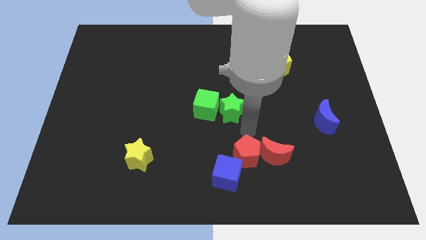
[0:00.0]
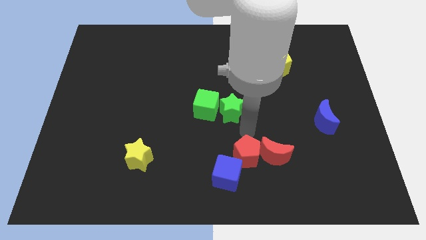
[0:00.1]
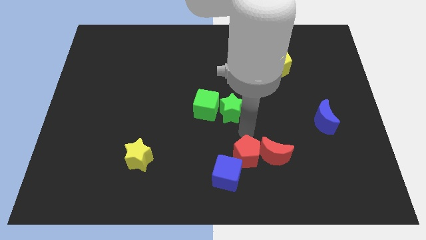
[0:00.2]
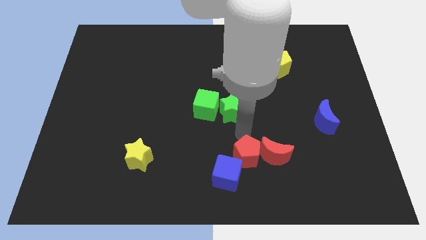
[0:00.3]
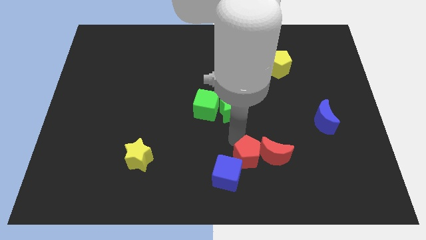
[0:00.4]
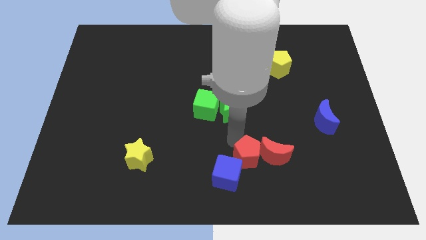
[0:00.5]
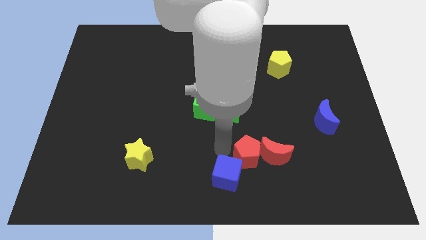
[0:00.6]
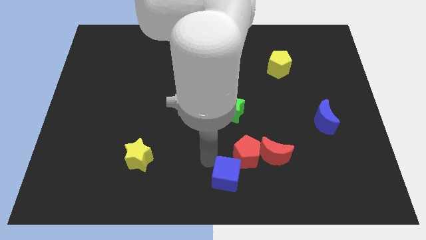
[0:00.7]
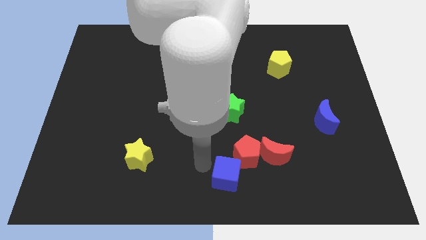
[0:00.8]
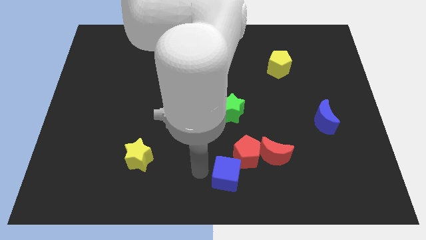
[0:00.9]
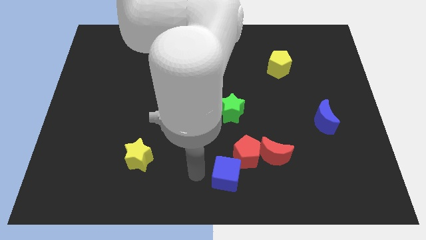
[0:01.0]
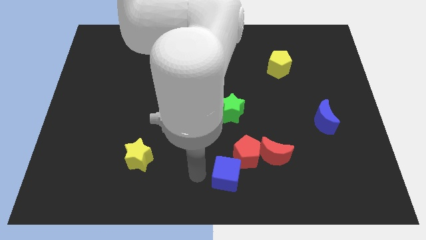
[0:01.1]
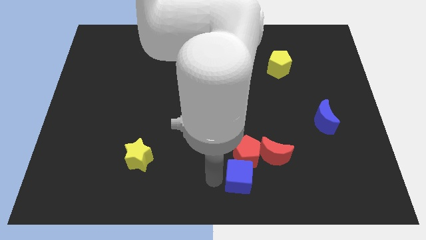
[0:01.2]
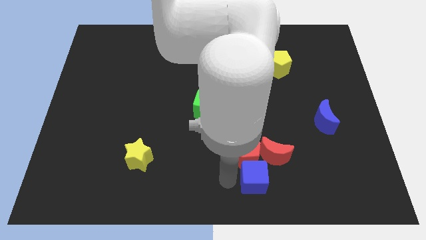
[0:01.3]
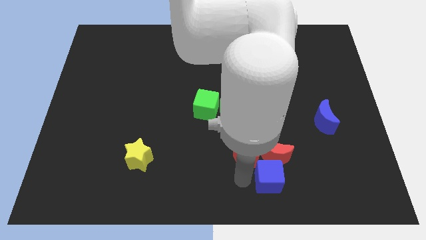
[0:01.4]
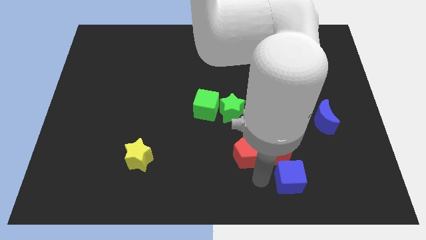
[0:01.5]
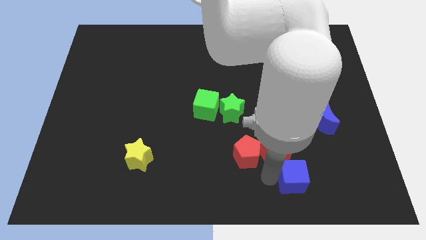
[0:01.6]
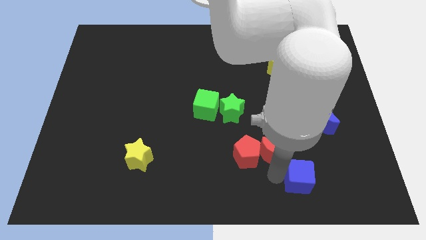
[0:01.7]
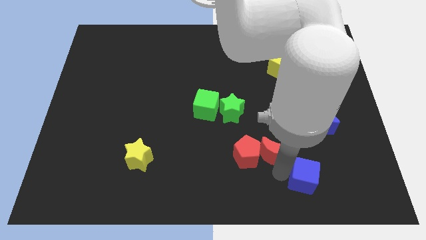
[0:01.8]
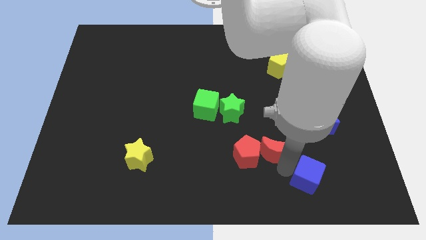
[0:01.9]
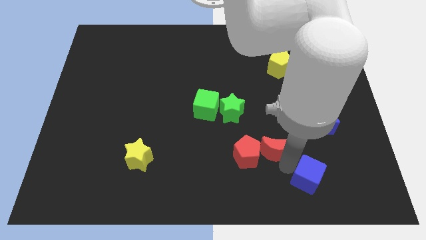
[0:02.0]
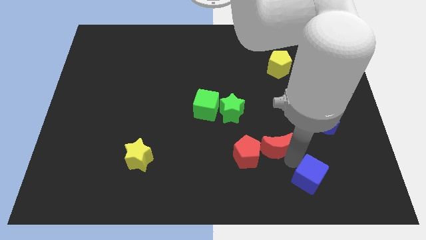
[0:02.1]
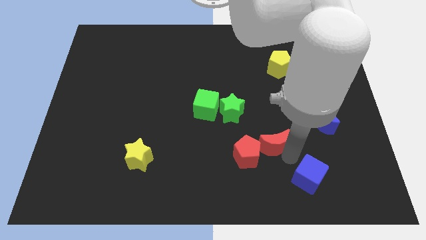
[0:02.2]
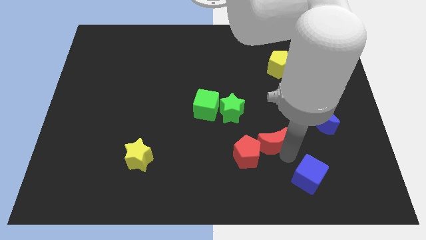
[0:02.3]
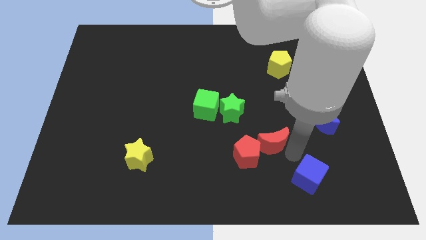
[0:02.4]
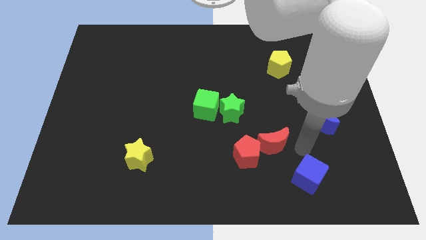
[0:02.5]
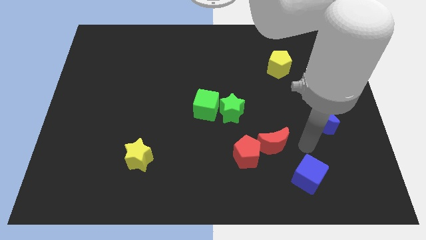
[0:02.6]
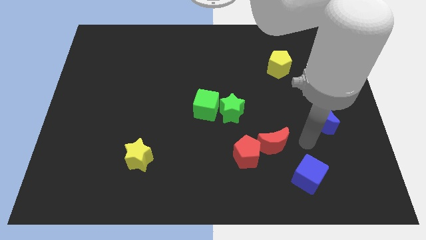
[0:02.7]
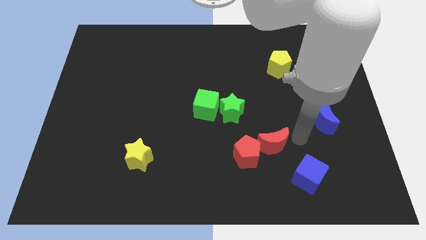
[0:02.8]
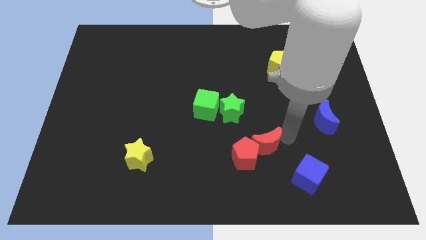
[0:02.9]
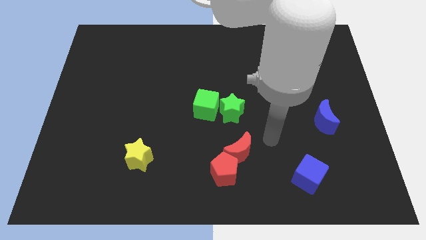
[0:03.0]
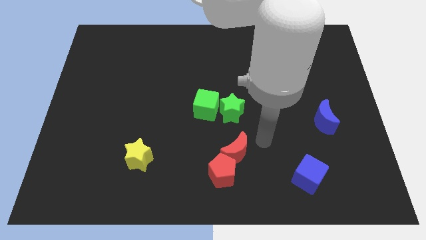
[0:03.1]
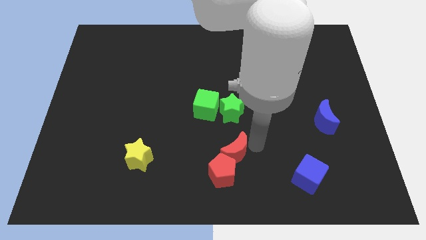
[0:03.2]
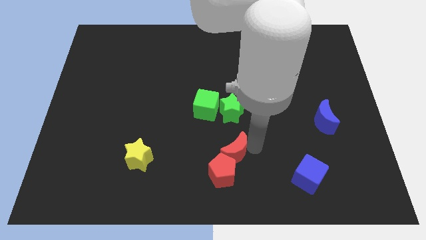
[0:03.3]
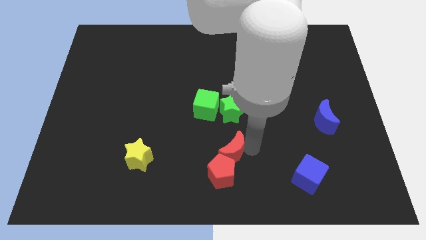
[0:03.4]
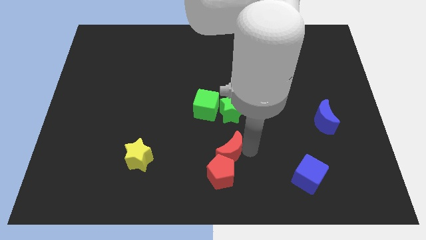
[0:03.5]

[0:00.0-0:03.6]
push red crescent below green star

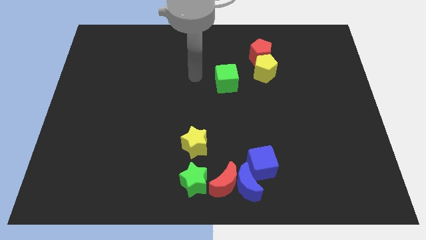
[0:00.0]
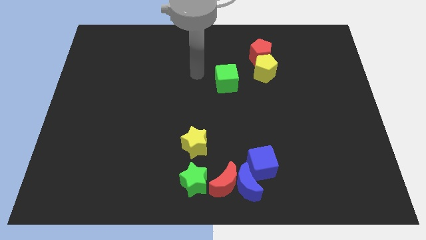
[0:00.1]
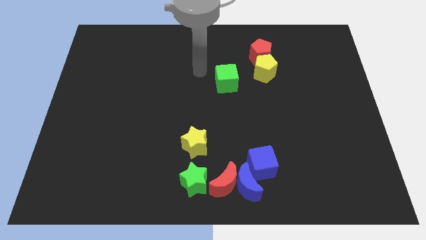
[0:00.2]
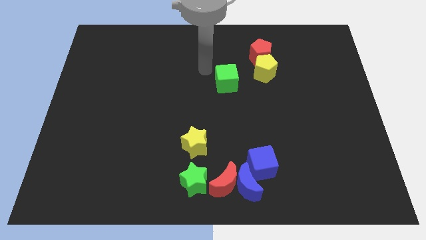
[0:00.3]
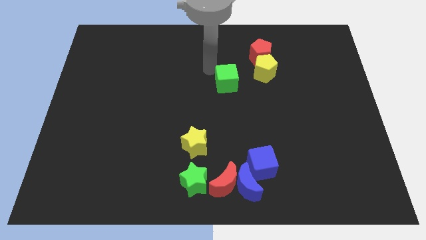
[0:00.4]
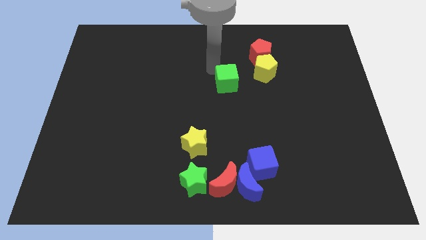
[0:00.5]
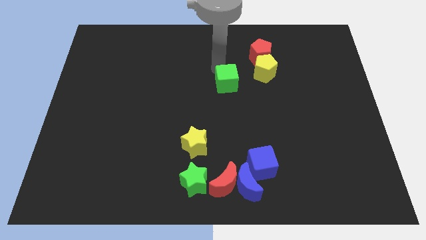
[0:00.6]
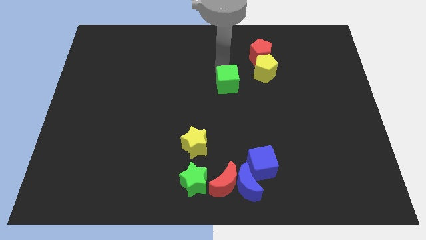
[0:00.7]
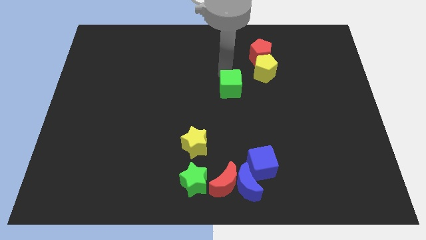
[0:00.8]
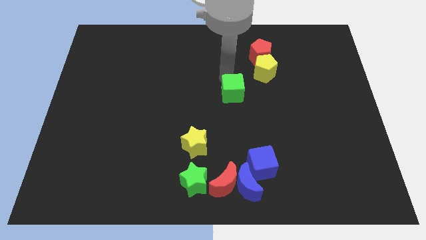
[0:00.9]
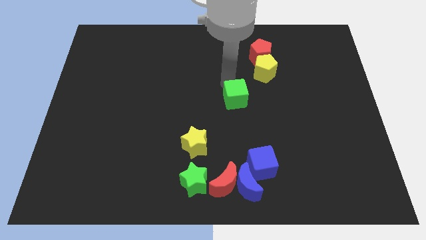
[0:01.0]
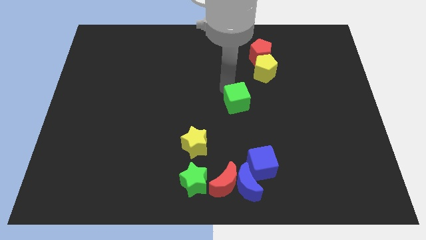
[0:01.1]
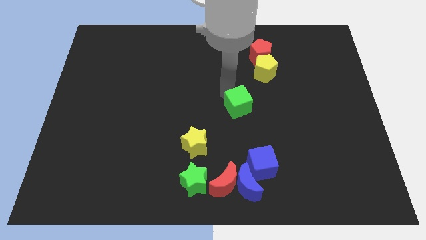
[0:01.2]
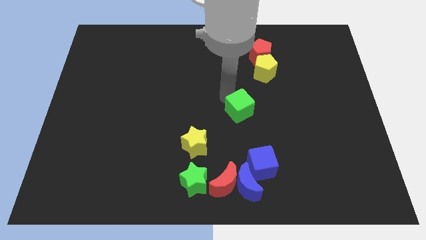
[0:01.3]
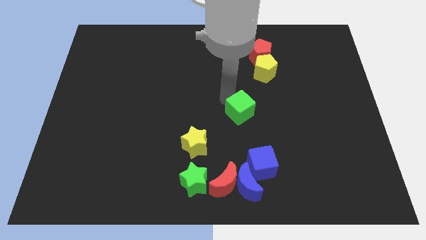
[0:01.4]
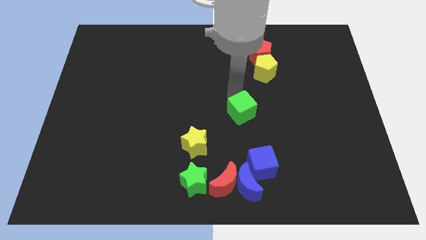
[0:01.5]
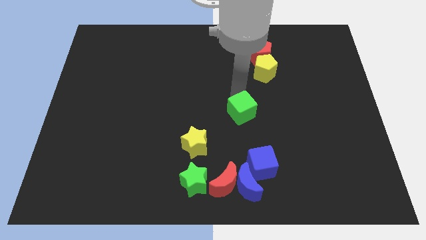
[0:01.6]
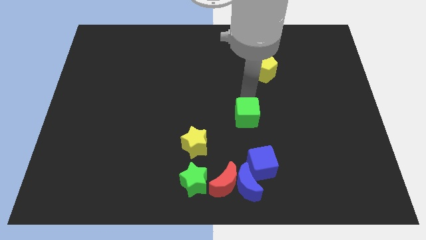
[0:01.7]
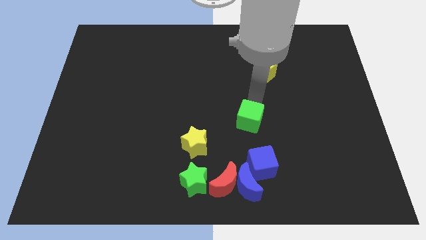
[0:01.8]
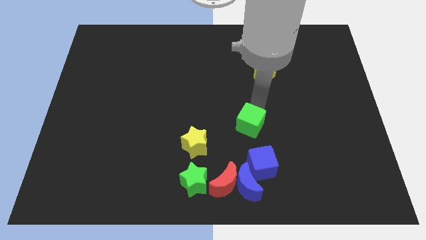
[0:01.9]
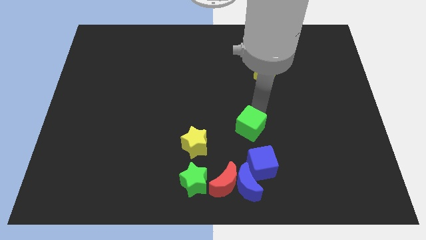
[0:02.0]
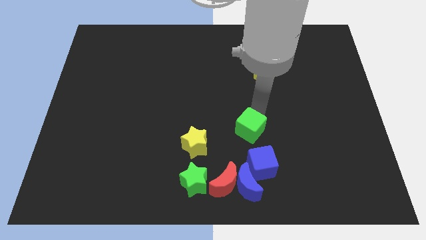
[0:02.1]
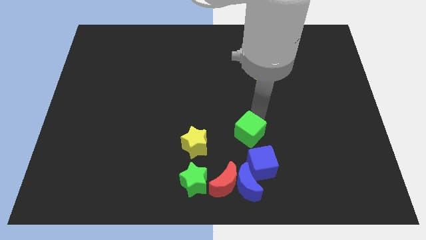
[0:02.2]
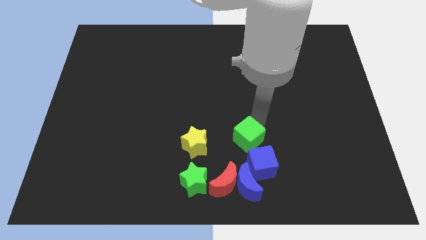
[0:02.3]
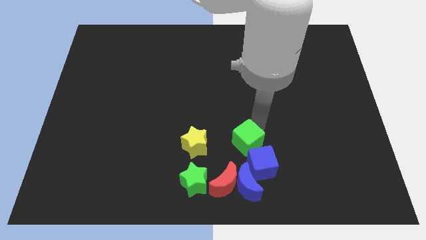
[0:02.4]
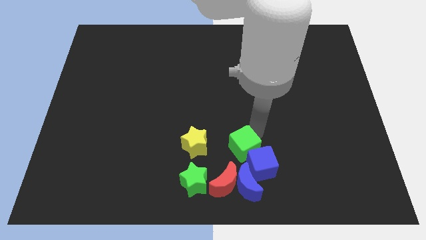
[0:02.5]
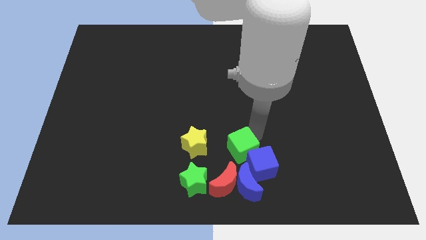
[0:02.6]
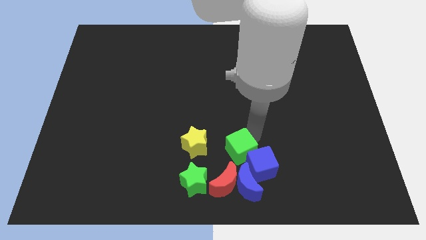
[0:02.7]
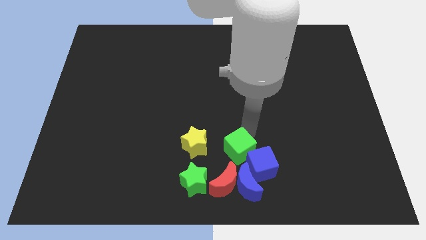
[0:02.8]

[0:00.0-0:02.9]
move the green cube left above the blue cube

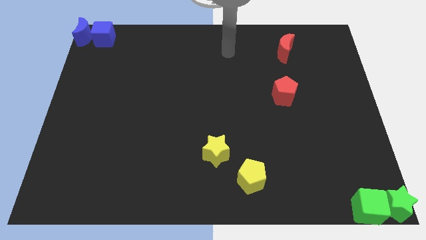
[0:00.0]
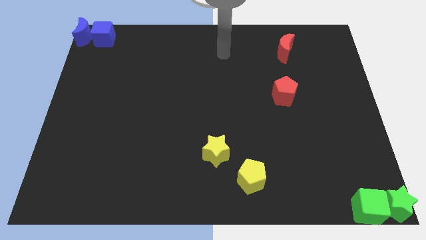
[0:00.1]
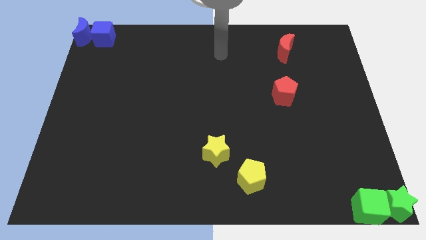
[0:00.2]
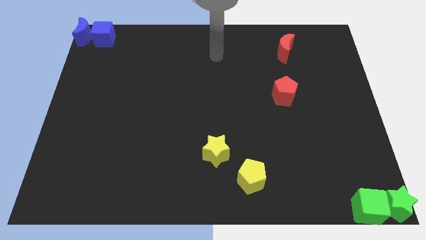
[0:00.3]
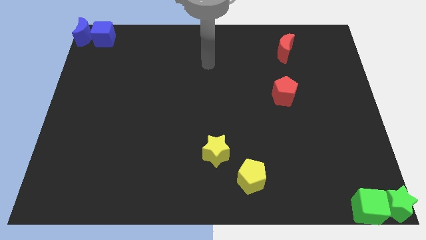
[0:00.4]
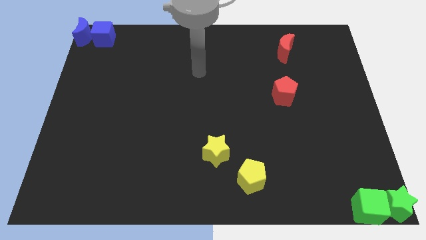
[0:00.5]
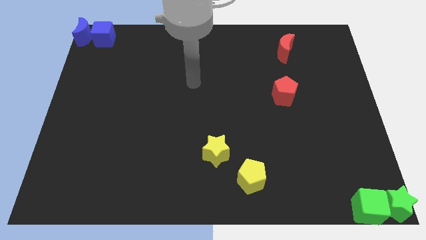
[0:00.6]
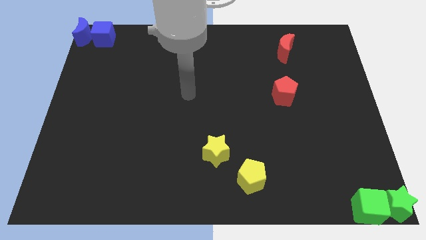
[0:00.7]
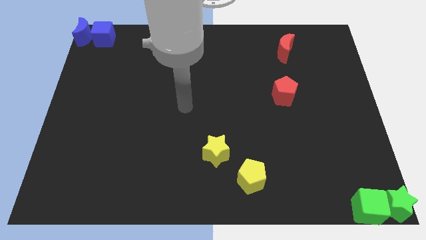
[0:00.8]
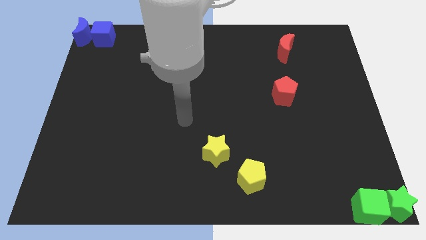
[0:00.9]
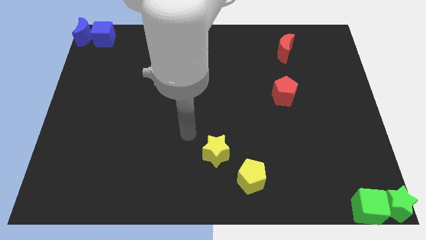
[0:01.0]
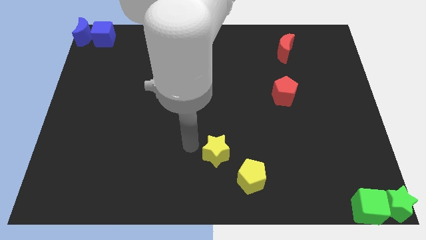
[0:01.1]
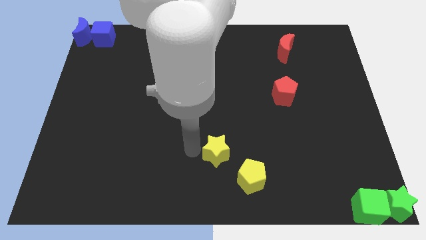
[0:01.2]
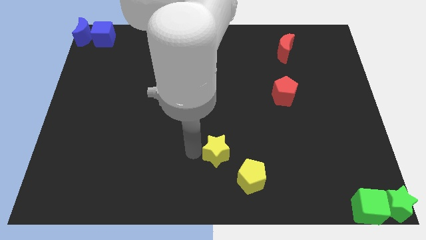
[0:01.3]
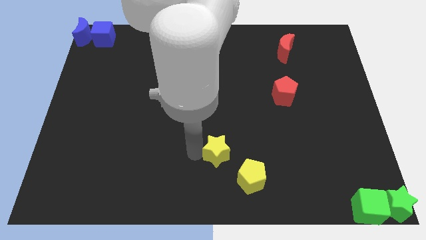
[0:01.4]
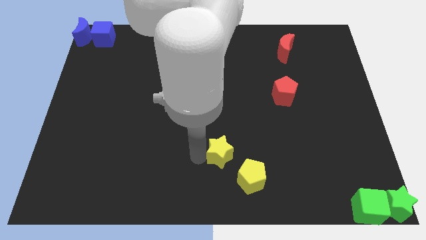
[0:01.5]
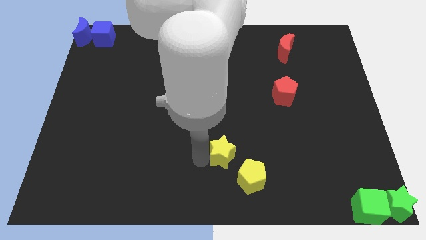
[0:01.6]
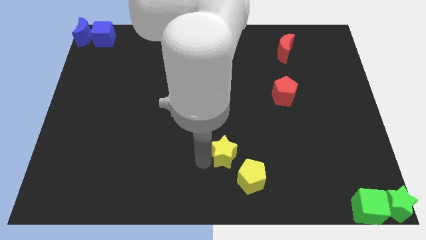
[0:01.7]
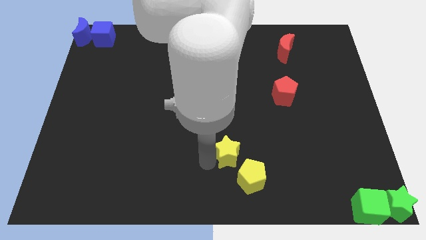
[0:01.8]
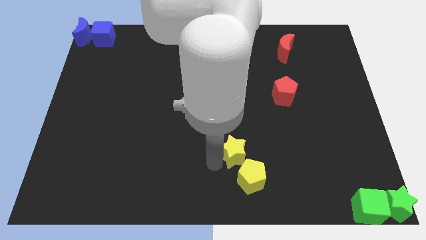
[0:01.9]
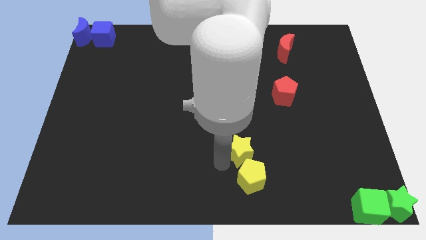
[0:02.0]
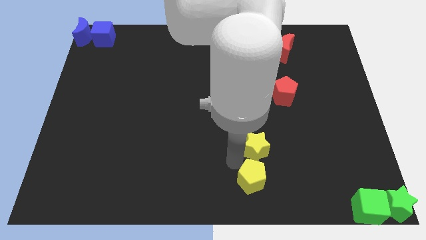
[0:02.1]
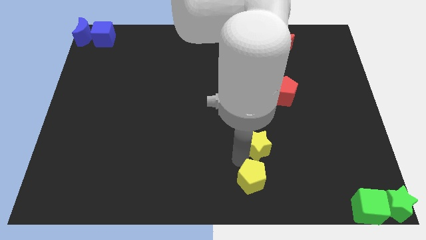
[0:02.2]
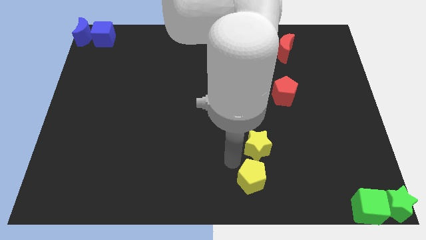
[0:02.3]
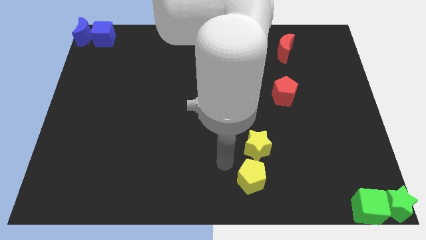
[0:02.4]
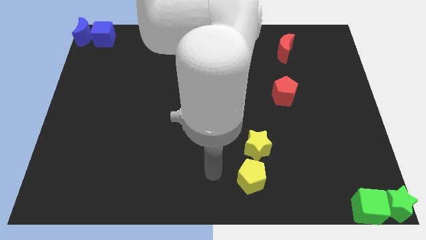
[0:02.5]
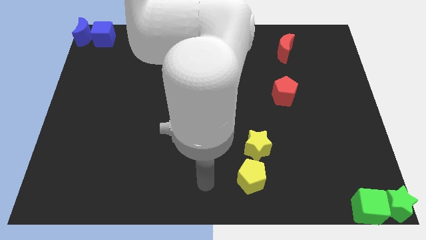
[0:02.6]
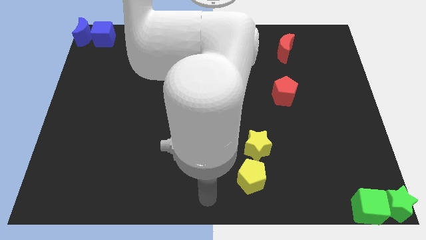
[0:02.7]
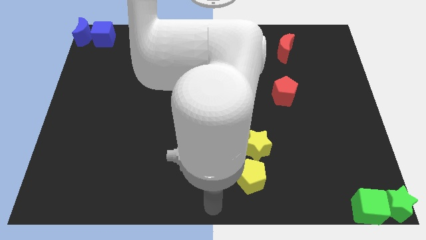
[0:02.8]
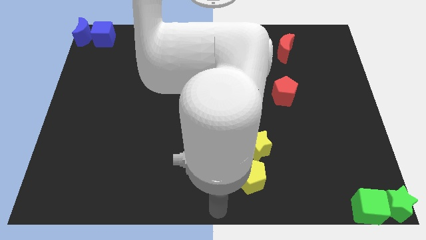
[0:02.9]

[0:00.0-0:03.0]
move the yellow star to the top of the yellow pentagon
